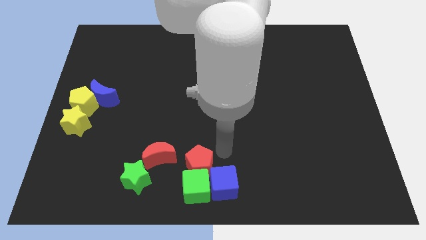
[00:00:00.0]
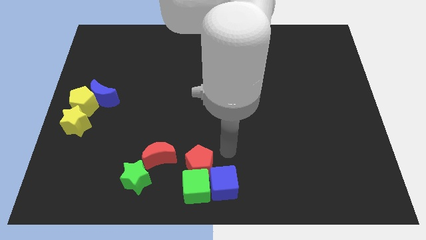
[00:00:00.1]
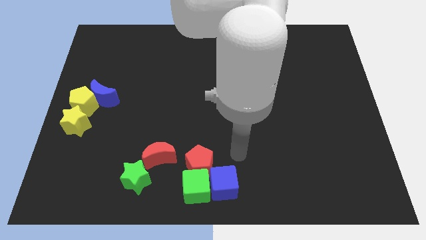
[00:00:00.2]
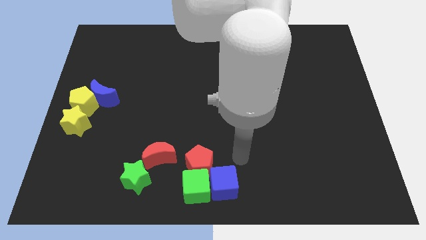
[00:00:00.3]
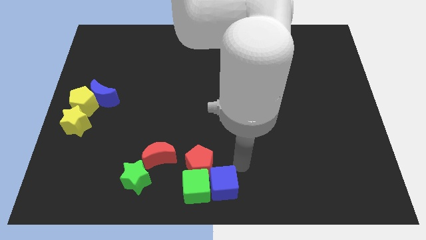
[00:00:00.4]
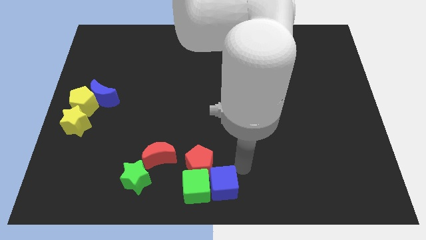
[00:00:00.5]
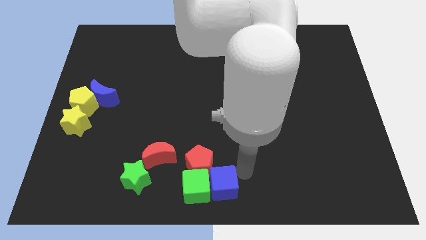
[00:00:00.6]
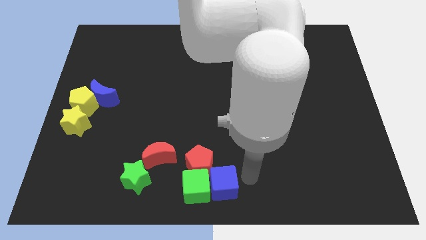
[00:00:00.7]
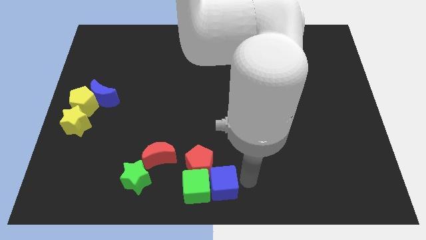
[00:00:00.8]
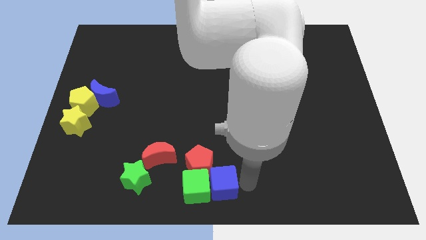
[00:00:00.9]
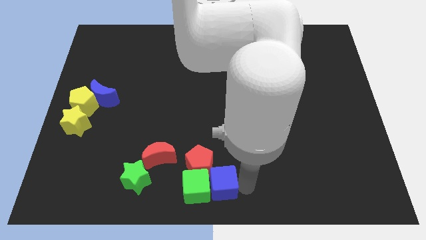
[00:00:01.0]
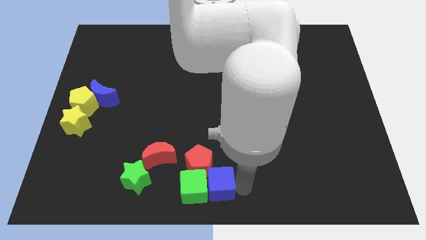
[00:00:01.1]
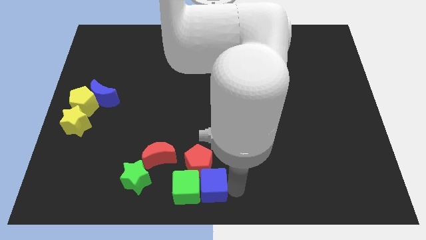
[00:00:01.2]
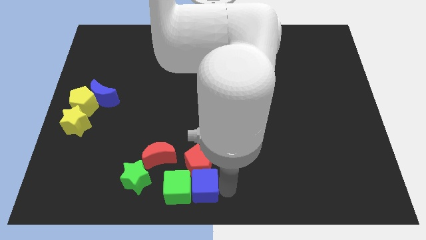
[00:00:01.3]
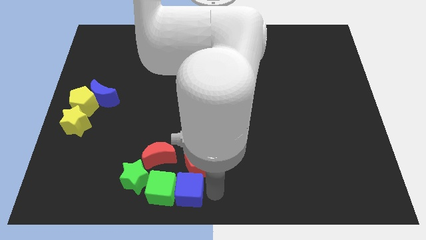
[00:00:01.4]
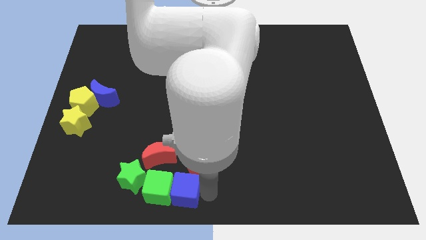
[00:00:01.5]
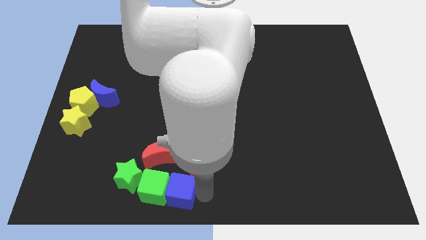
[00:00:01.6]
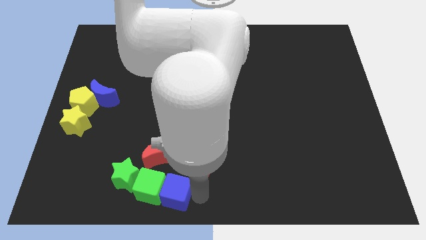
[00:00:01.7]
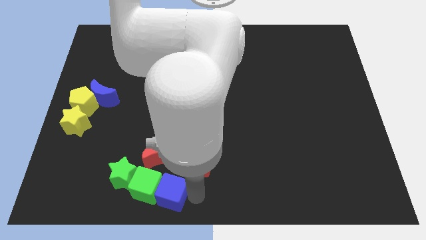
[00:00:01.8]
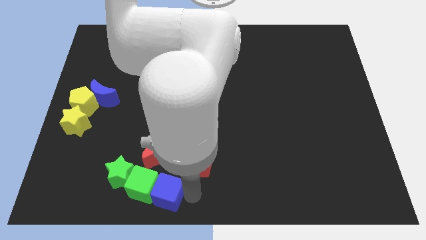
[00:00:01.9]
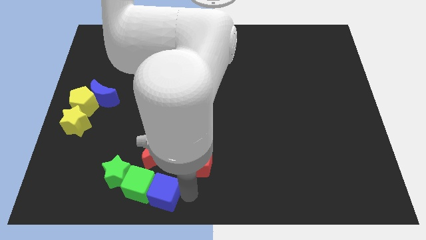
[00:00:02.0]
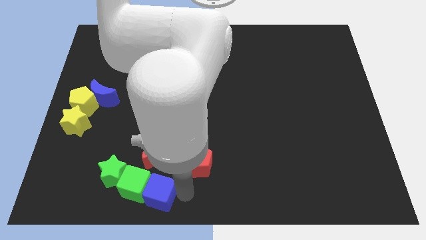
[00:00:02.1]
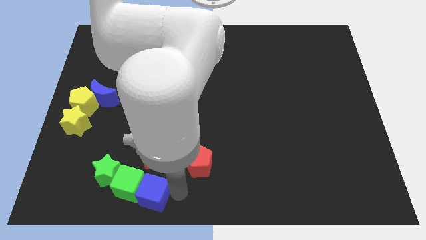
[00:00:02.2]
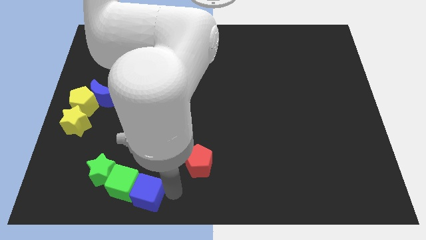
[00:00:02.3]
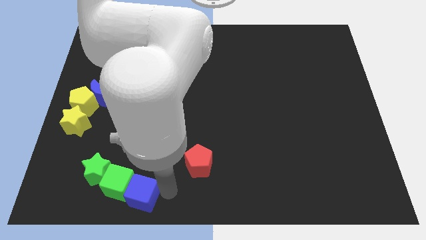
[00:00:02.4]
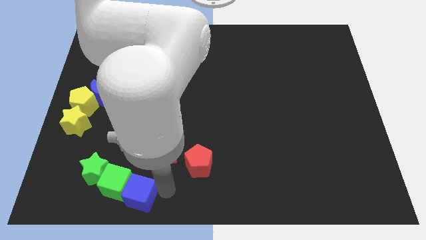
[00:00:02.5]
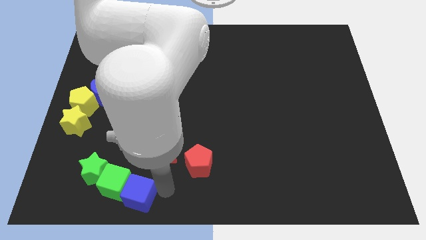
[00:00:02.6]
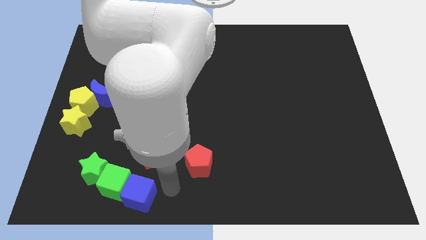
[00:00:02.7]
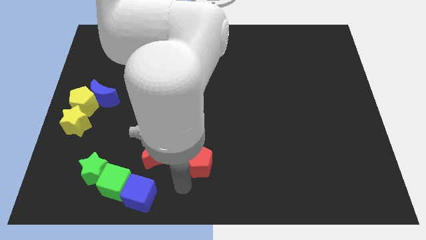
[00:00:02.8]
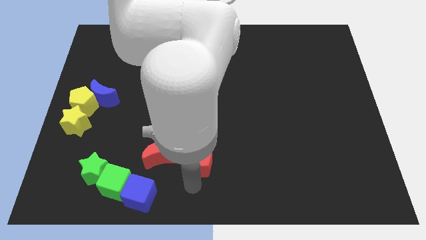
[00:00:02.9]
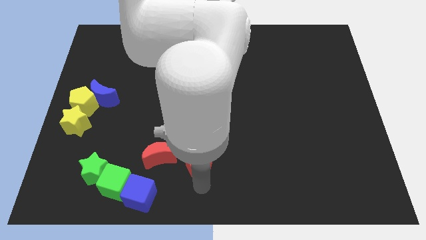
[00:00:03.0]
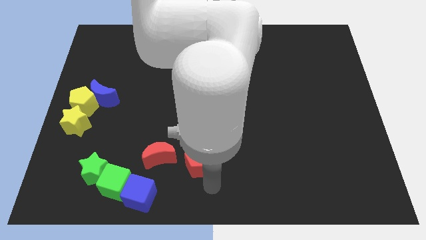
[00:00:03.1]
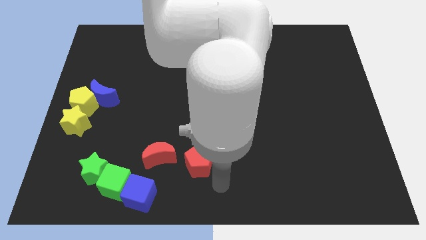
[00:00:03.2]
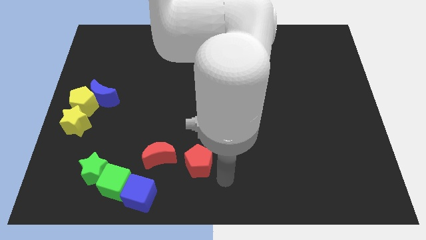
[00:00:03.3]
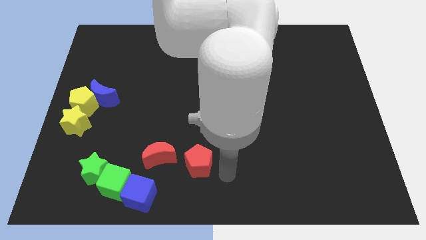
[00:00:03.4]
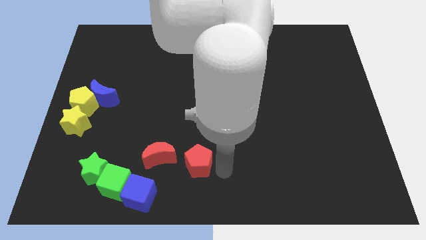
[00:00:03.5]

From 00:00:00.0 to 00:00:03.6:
push green cube and blue cube to the green star

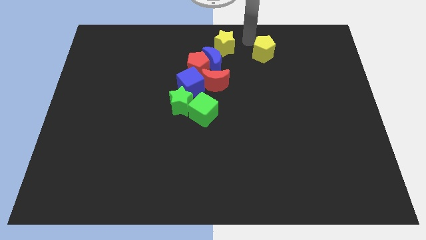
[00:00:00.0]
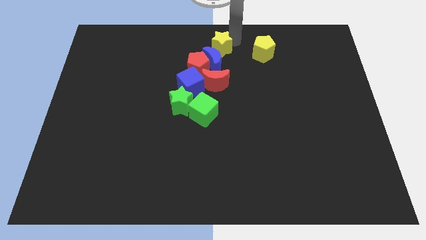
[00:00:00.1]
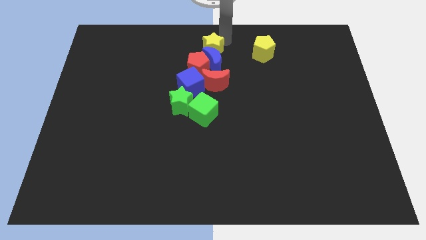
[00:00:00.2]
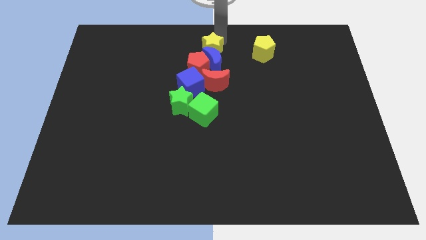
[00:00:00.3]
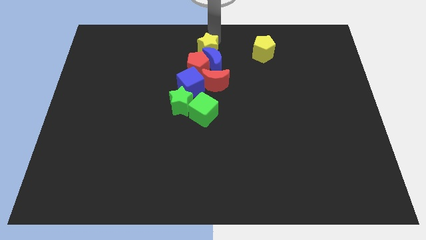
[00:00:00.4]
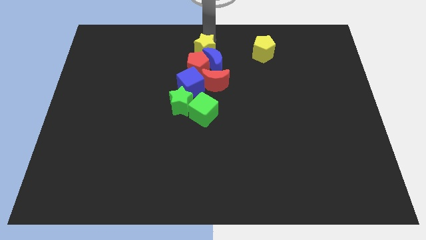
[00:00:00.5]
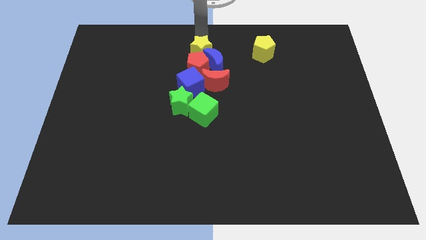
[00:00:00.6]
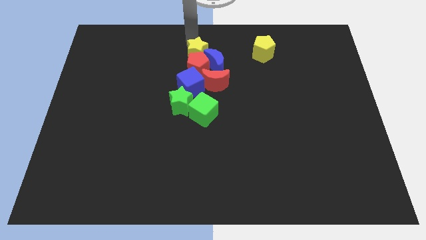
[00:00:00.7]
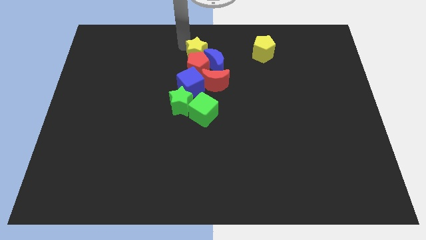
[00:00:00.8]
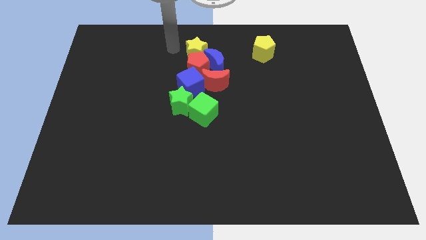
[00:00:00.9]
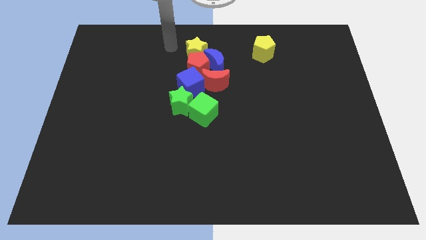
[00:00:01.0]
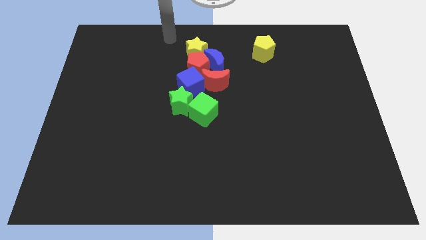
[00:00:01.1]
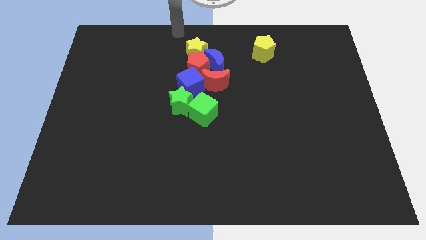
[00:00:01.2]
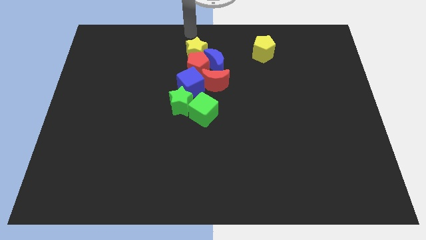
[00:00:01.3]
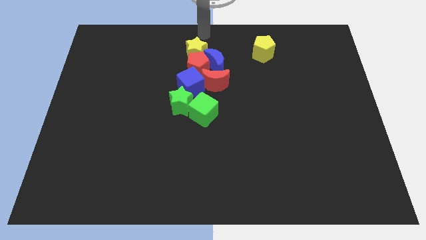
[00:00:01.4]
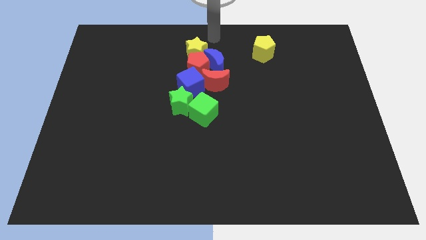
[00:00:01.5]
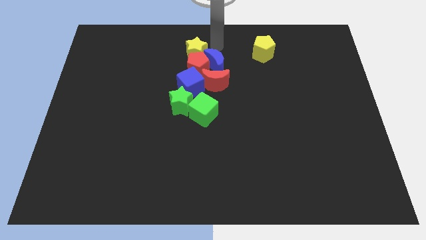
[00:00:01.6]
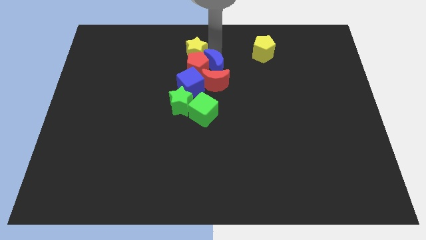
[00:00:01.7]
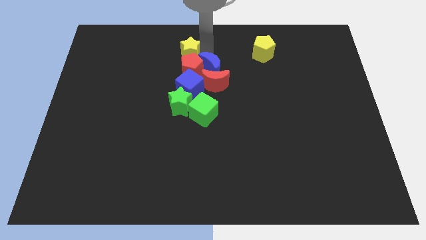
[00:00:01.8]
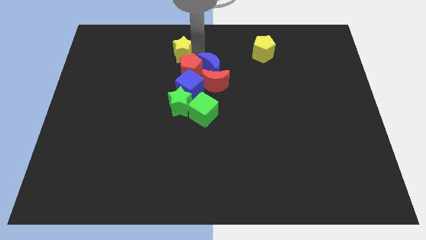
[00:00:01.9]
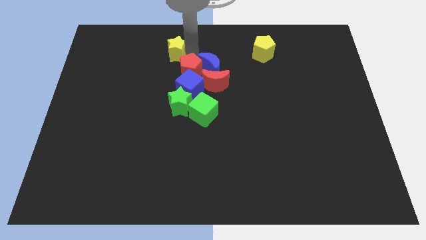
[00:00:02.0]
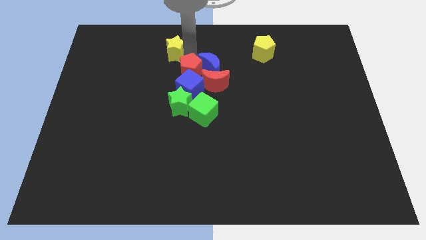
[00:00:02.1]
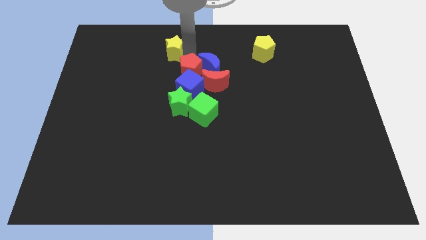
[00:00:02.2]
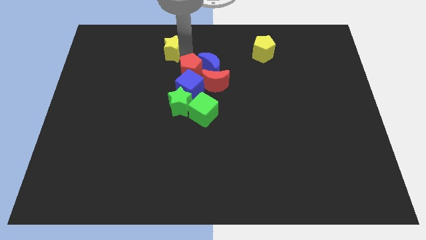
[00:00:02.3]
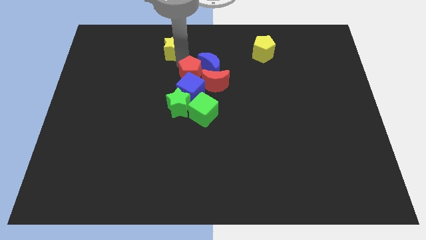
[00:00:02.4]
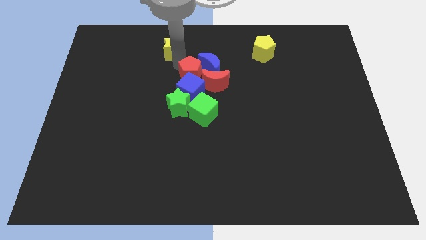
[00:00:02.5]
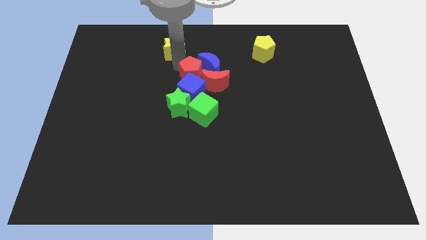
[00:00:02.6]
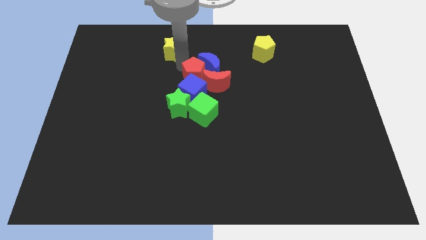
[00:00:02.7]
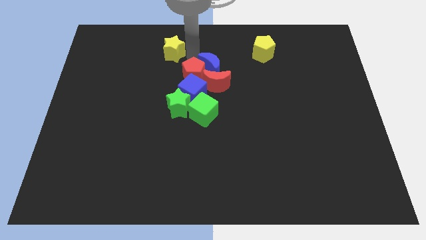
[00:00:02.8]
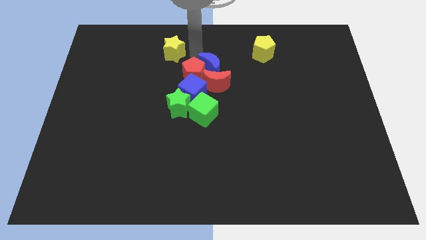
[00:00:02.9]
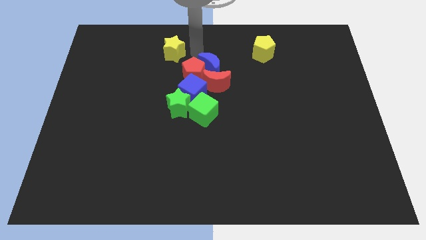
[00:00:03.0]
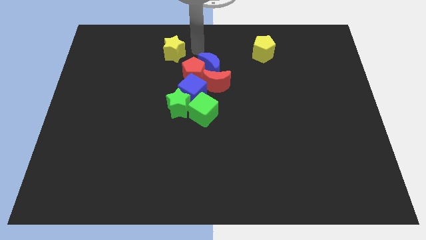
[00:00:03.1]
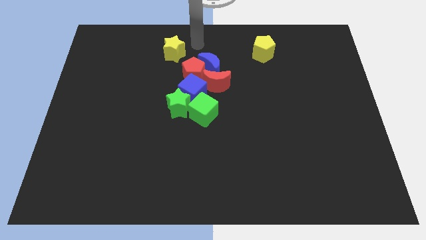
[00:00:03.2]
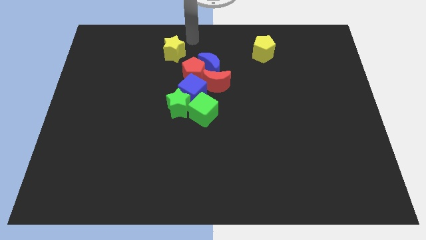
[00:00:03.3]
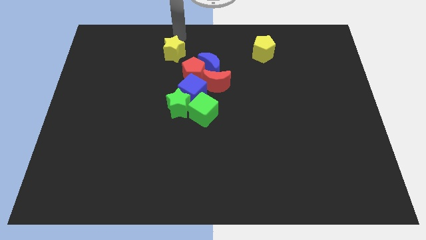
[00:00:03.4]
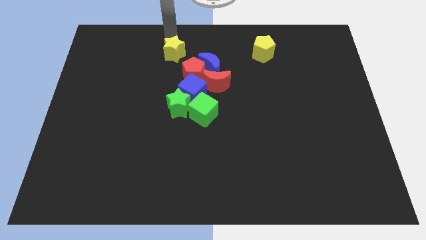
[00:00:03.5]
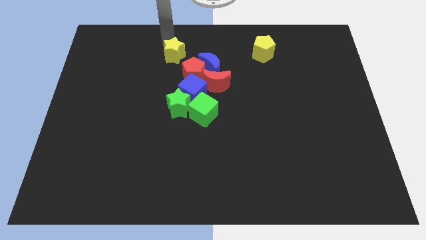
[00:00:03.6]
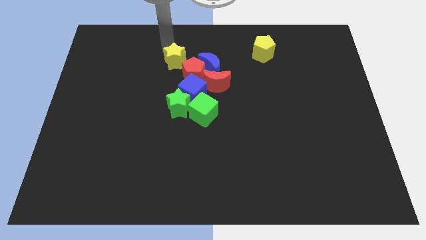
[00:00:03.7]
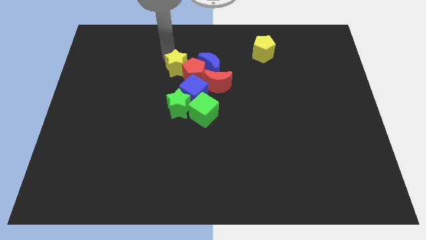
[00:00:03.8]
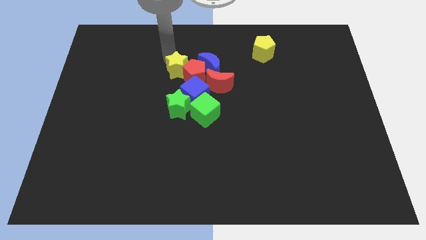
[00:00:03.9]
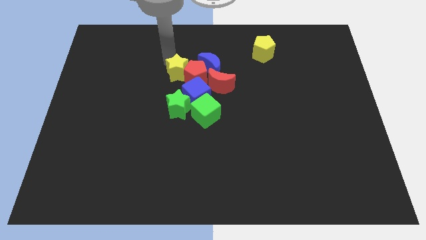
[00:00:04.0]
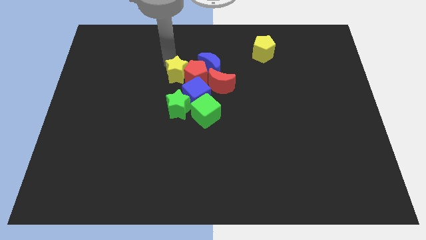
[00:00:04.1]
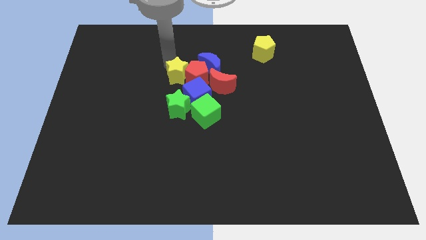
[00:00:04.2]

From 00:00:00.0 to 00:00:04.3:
place yellow star to the left of red pentagon

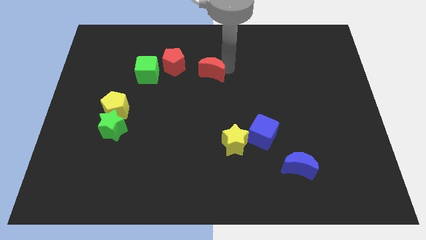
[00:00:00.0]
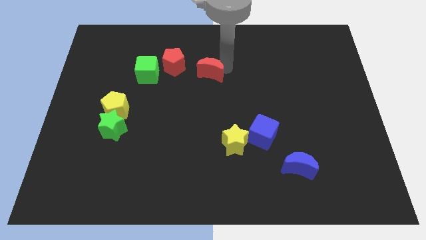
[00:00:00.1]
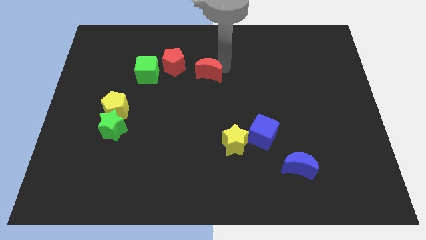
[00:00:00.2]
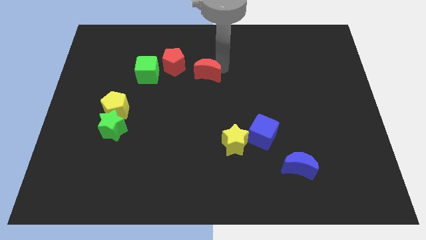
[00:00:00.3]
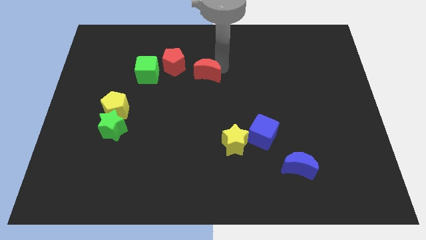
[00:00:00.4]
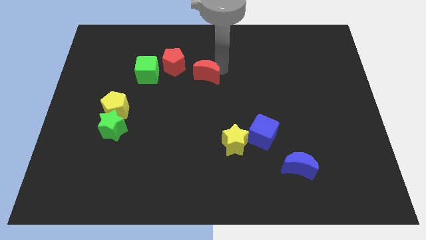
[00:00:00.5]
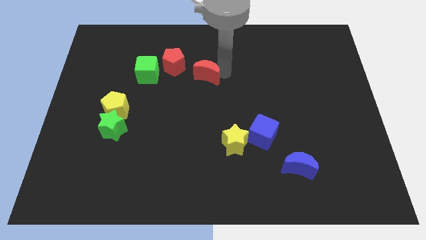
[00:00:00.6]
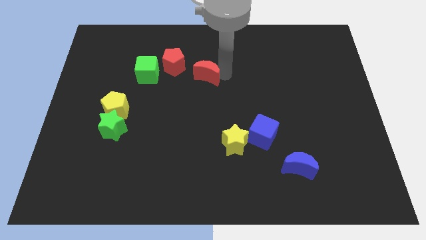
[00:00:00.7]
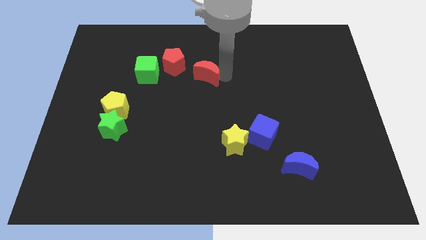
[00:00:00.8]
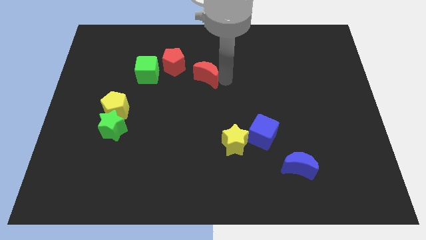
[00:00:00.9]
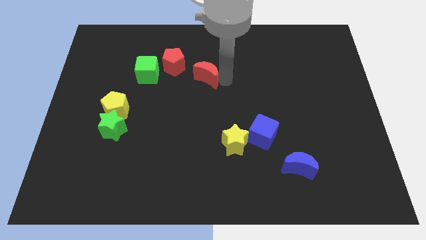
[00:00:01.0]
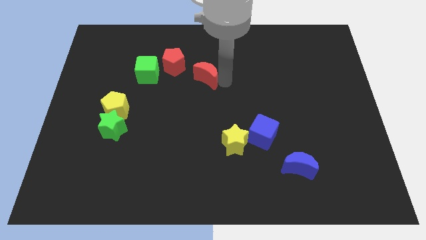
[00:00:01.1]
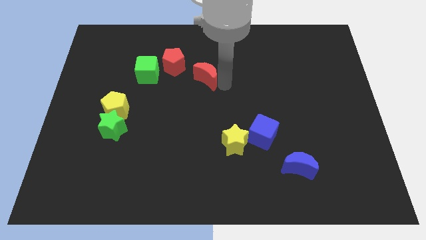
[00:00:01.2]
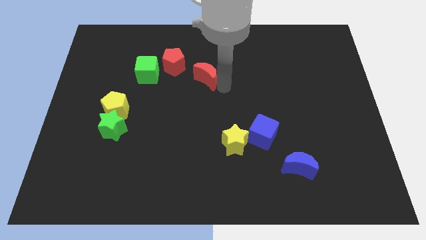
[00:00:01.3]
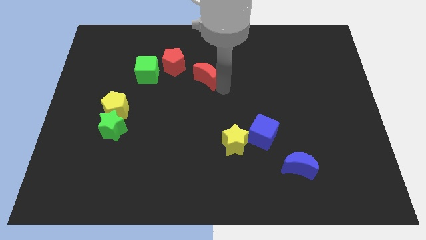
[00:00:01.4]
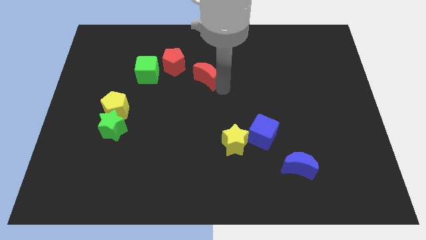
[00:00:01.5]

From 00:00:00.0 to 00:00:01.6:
move the red moon slightly downwards
